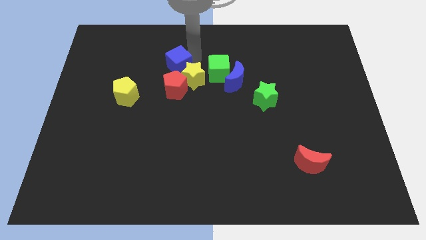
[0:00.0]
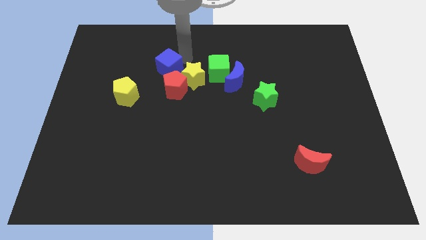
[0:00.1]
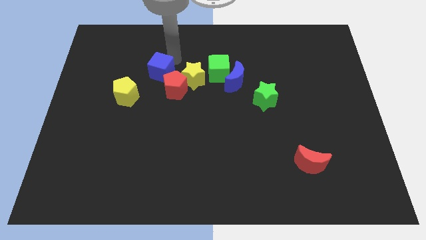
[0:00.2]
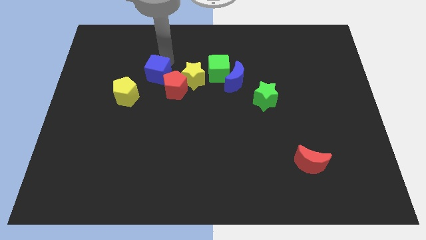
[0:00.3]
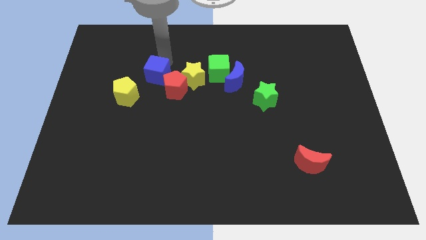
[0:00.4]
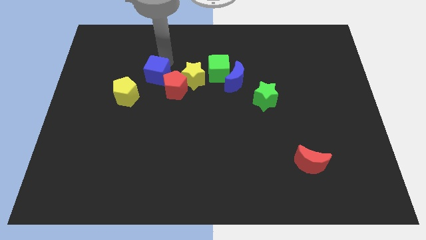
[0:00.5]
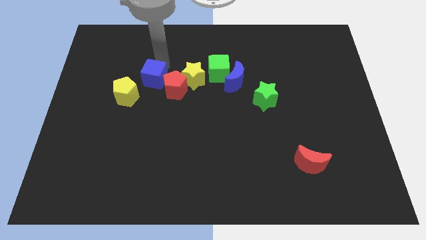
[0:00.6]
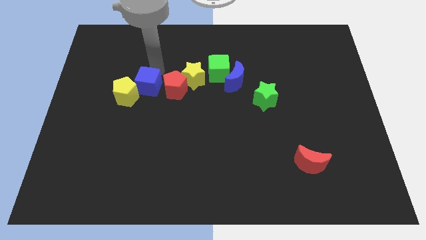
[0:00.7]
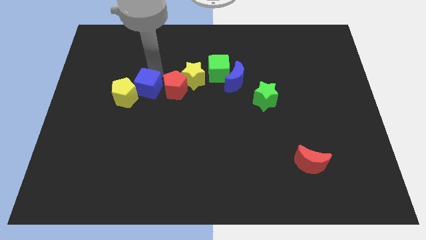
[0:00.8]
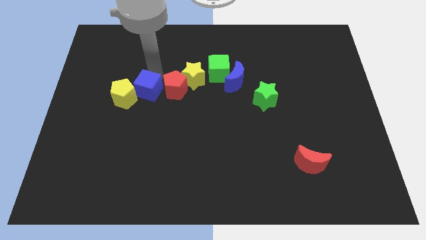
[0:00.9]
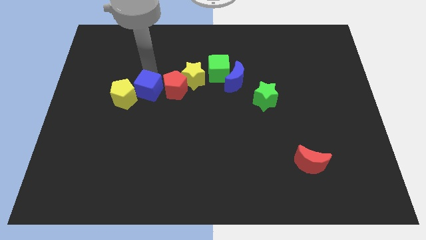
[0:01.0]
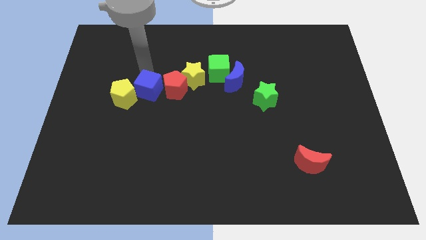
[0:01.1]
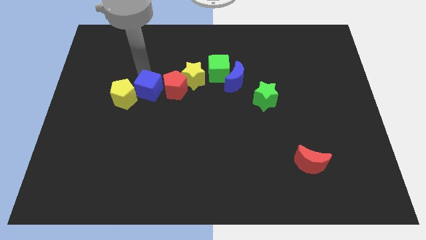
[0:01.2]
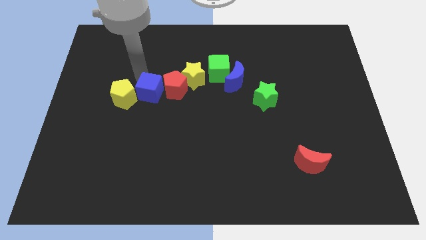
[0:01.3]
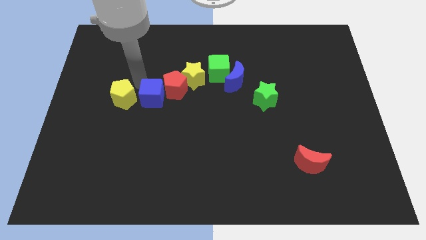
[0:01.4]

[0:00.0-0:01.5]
place the blue cube in between the red pentagon and the yellow pentagon

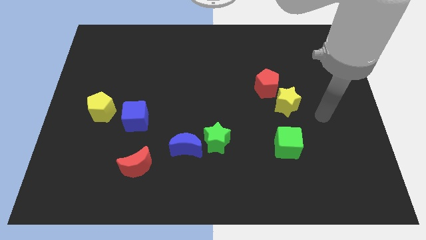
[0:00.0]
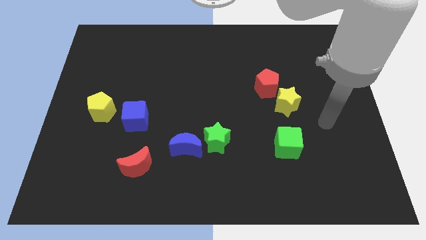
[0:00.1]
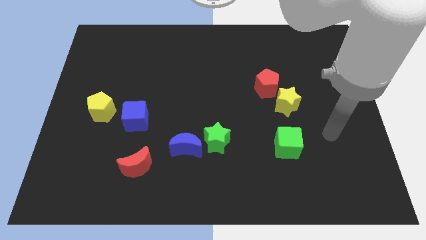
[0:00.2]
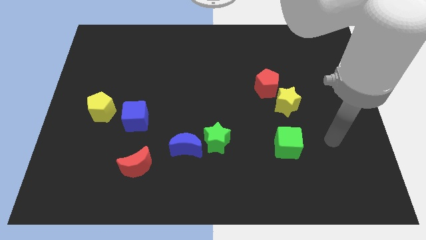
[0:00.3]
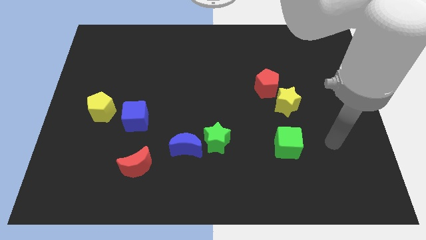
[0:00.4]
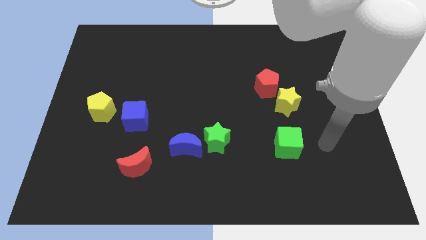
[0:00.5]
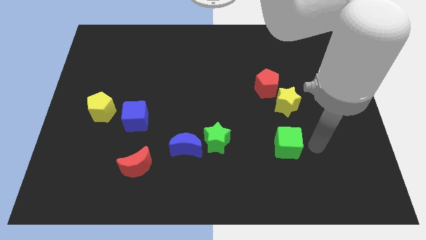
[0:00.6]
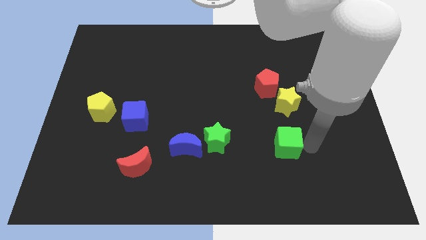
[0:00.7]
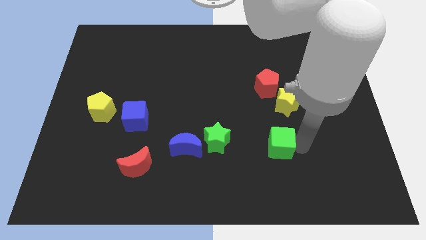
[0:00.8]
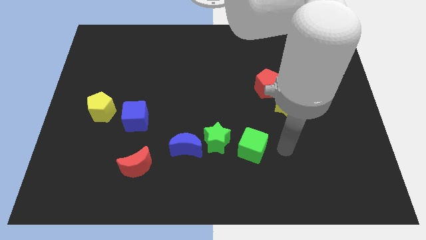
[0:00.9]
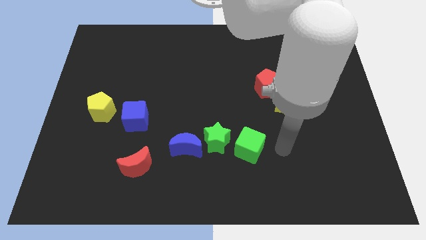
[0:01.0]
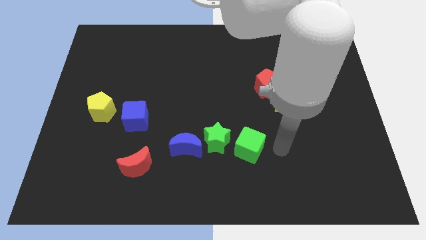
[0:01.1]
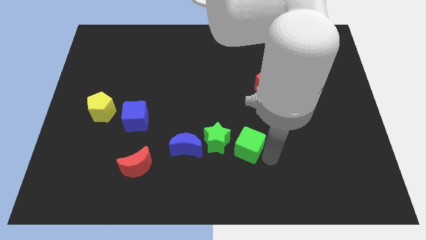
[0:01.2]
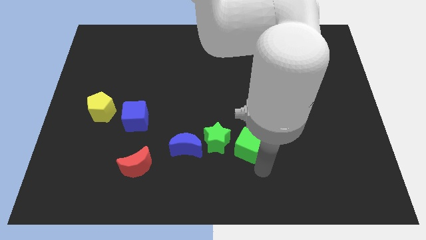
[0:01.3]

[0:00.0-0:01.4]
push the green cube to the left

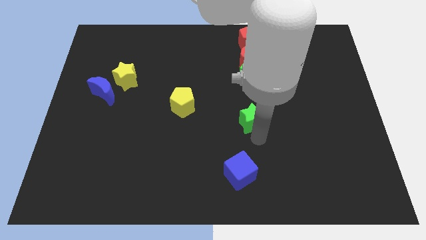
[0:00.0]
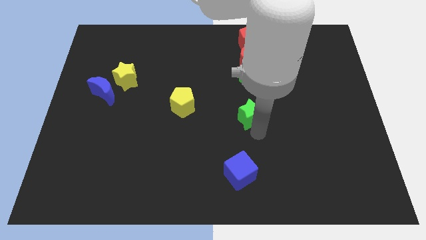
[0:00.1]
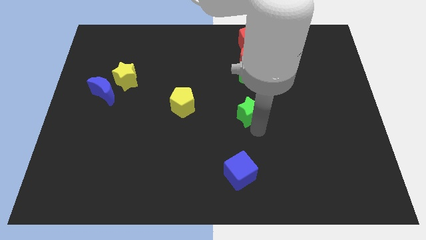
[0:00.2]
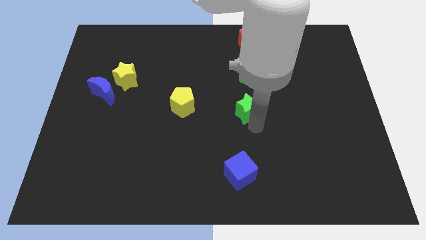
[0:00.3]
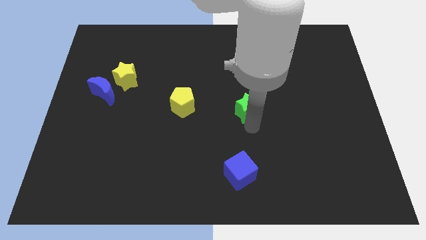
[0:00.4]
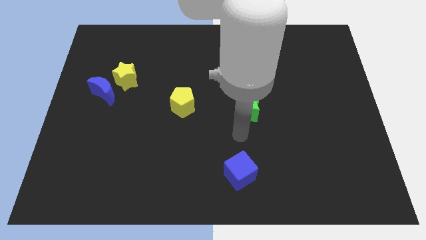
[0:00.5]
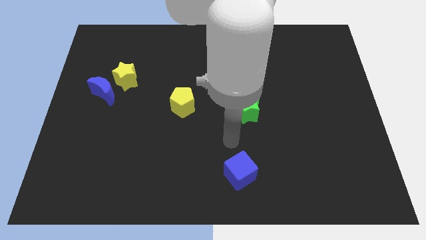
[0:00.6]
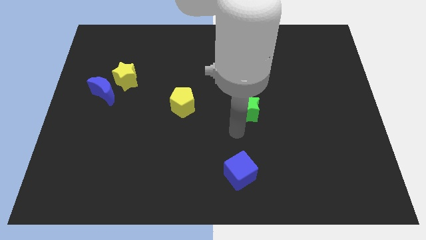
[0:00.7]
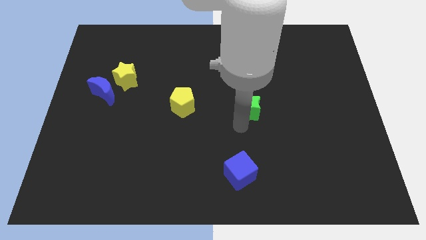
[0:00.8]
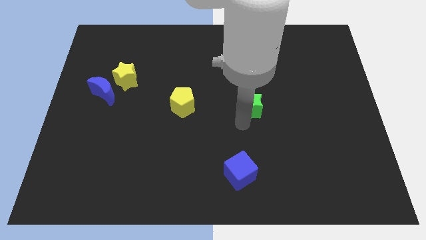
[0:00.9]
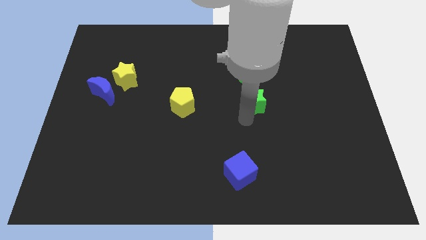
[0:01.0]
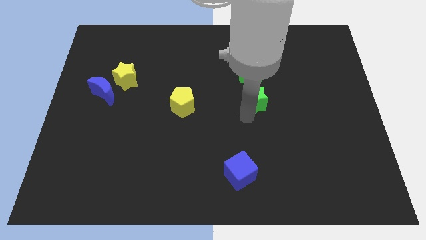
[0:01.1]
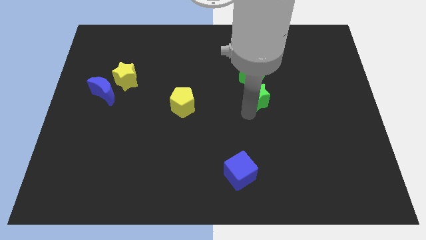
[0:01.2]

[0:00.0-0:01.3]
place green star below the green cube

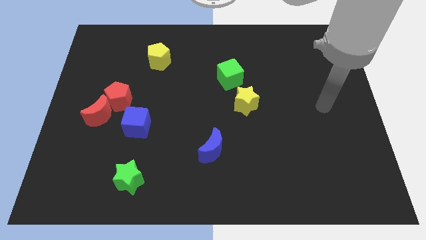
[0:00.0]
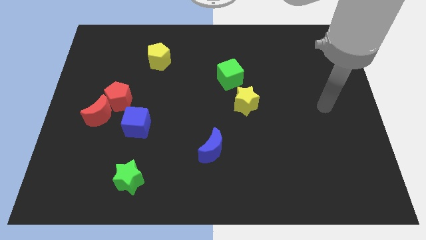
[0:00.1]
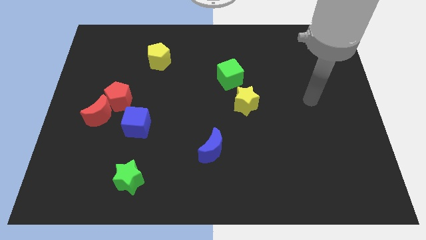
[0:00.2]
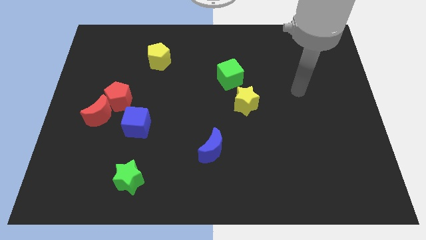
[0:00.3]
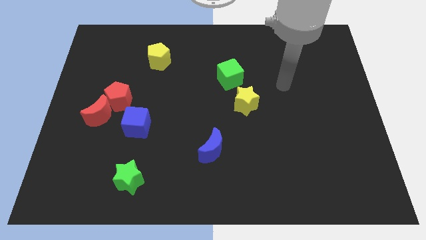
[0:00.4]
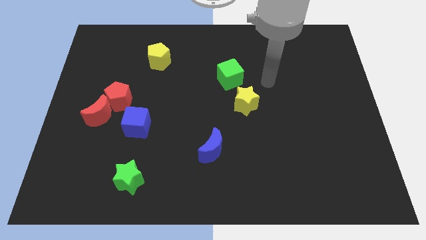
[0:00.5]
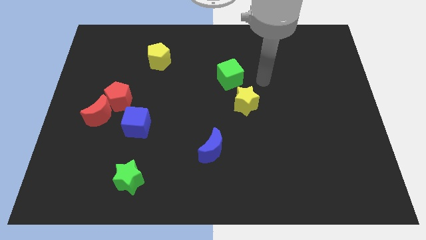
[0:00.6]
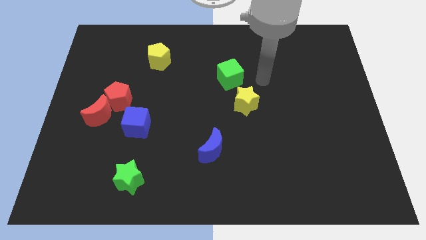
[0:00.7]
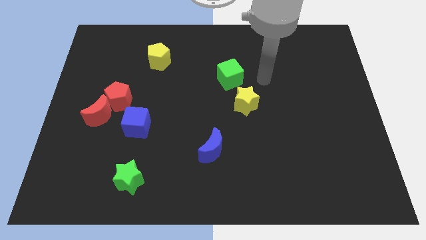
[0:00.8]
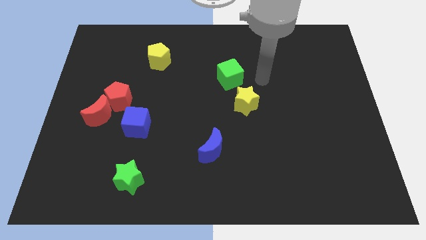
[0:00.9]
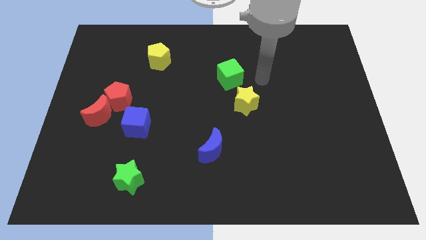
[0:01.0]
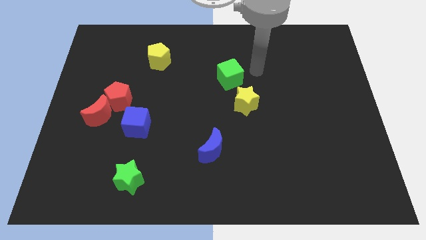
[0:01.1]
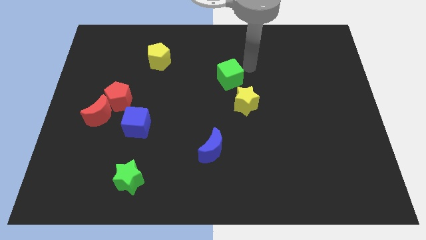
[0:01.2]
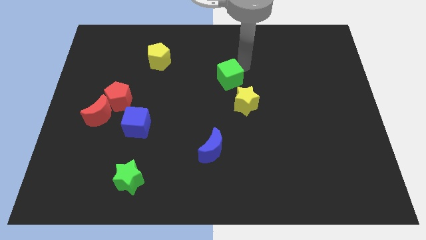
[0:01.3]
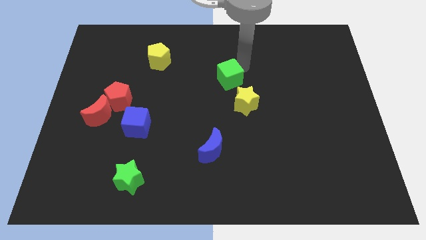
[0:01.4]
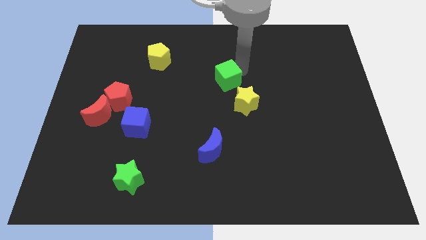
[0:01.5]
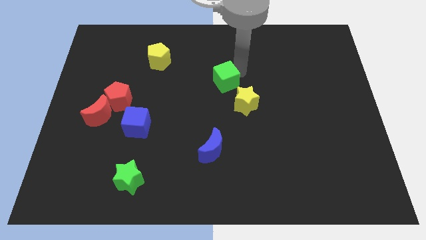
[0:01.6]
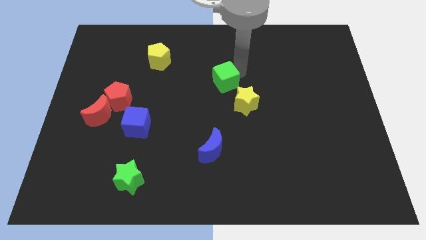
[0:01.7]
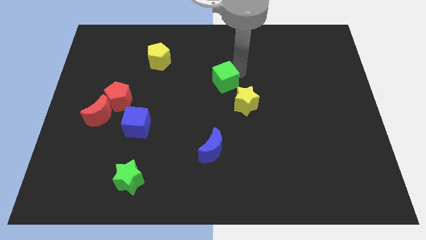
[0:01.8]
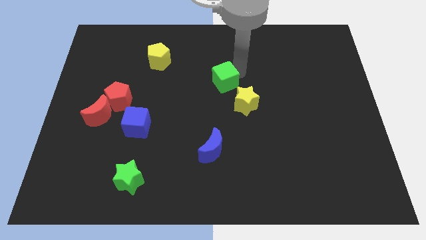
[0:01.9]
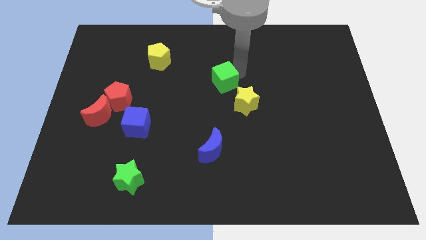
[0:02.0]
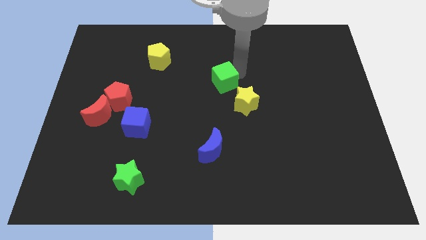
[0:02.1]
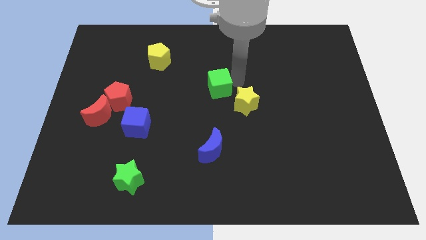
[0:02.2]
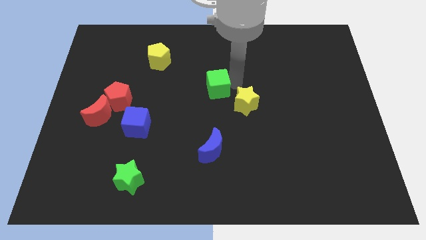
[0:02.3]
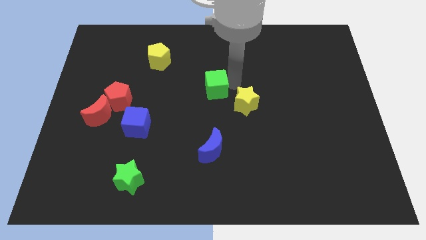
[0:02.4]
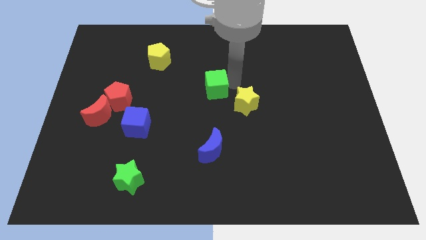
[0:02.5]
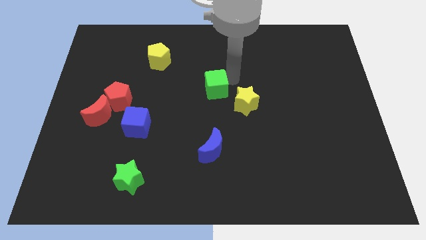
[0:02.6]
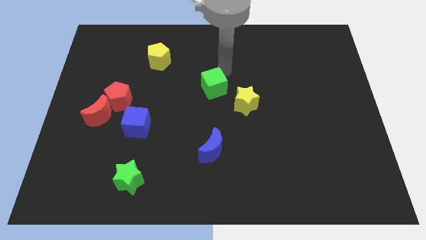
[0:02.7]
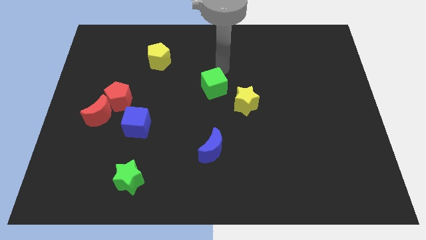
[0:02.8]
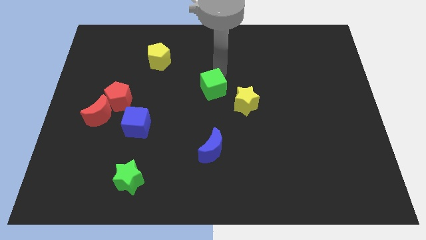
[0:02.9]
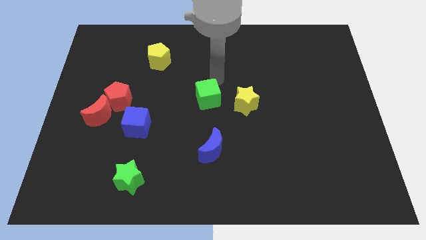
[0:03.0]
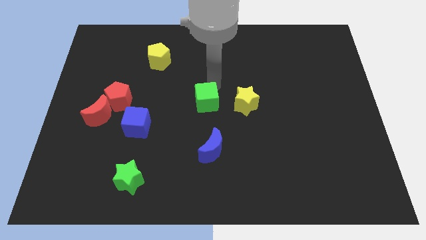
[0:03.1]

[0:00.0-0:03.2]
move the green cube parallel left of the yellow star

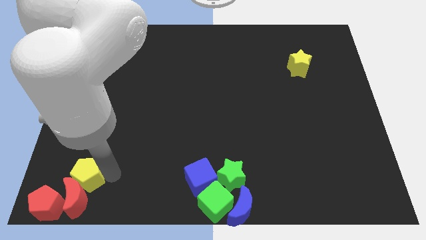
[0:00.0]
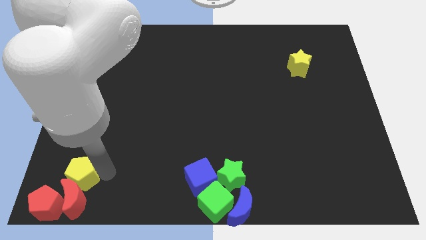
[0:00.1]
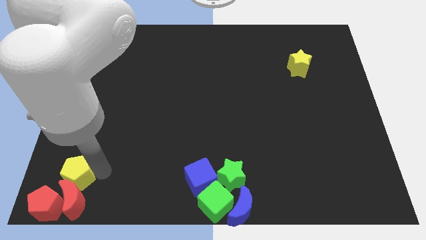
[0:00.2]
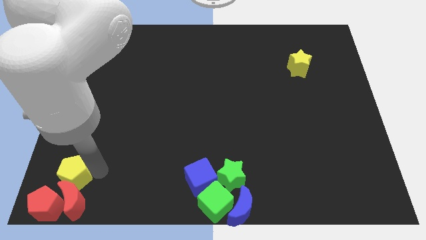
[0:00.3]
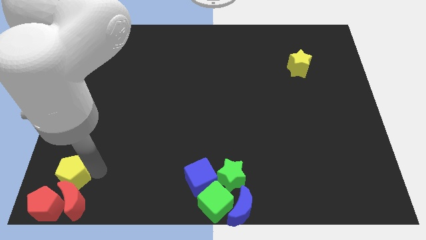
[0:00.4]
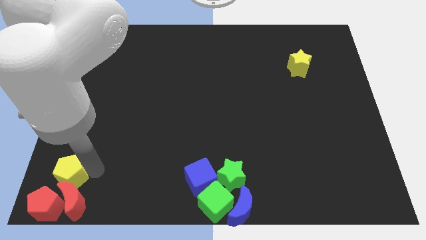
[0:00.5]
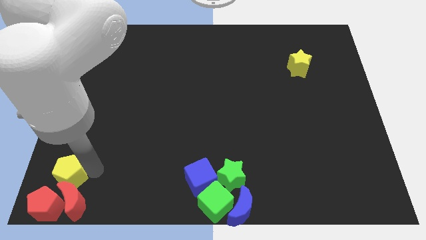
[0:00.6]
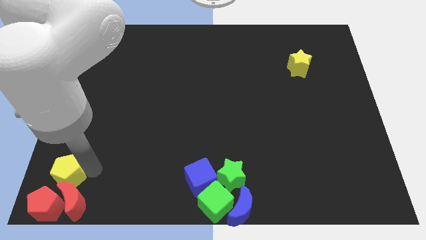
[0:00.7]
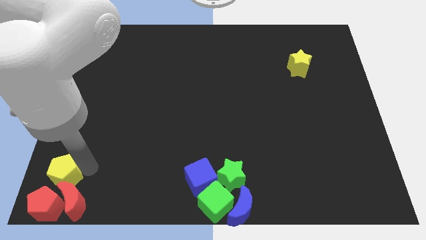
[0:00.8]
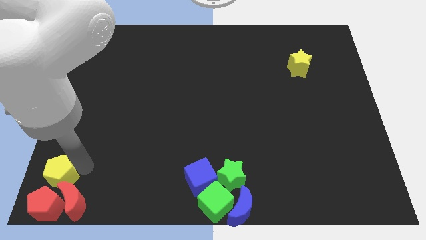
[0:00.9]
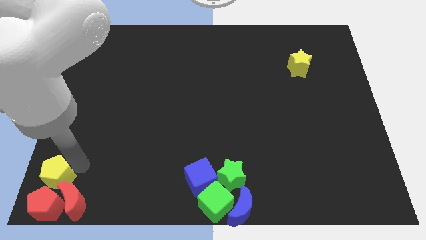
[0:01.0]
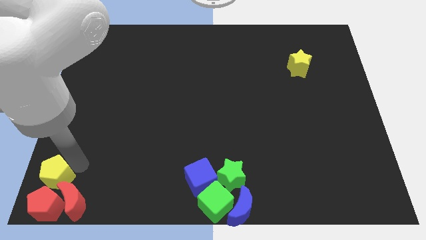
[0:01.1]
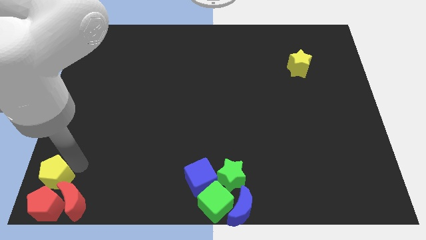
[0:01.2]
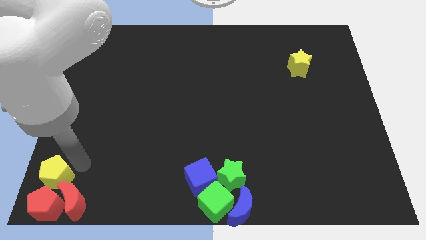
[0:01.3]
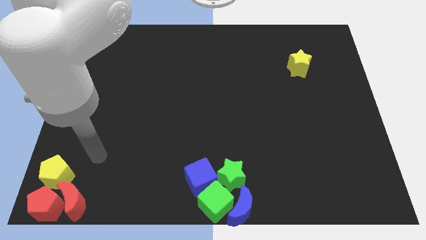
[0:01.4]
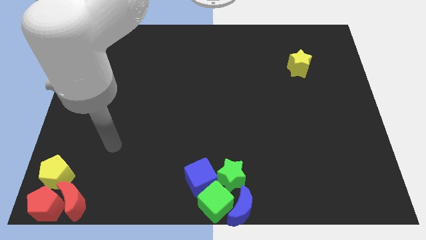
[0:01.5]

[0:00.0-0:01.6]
place the yellow pentagon above the red pentagon
